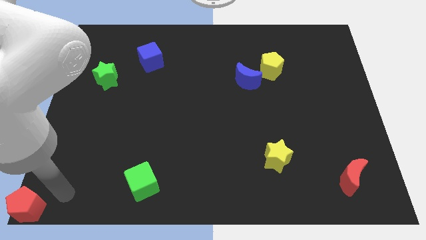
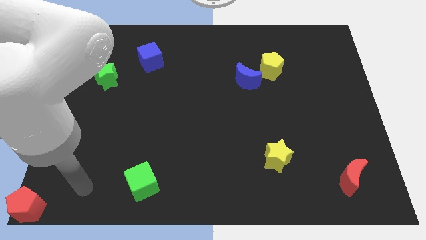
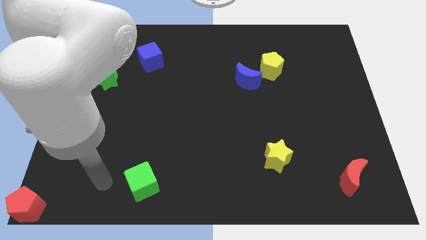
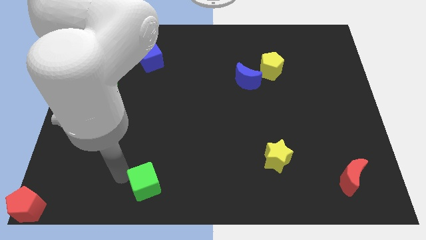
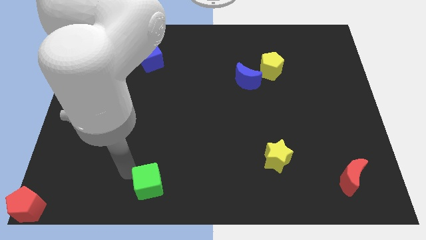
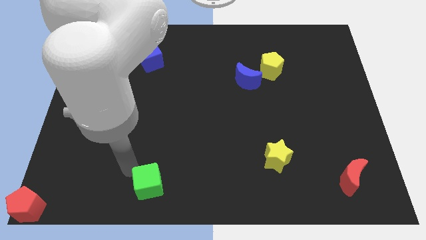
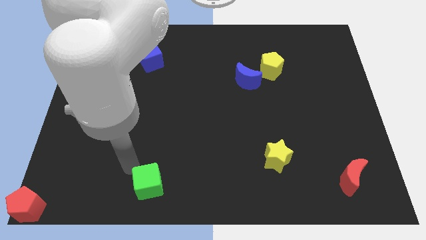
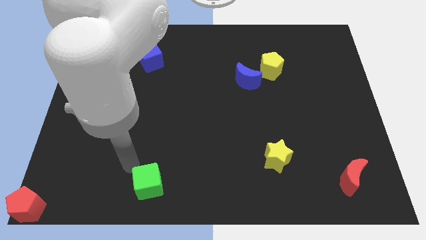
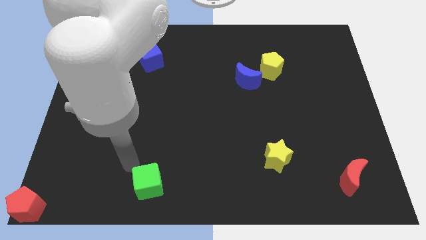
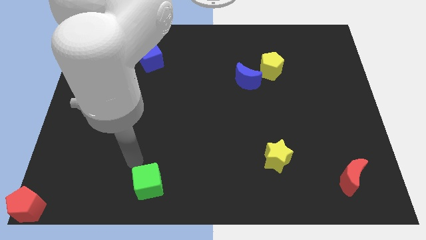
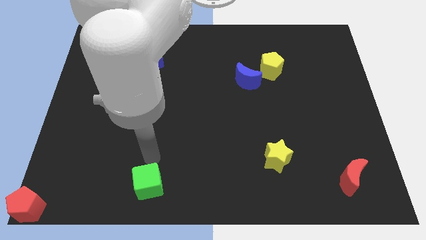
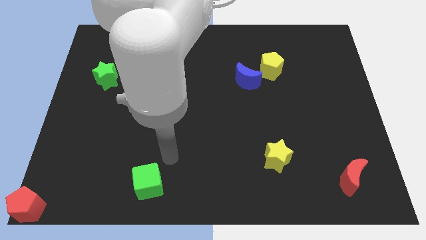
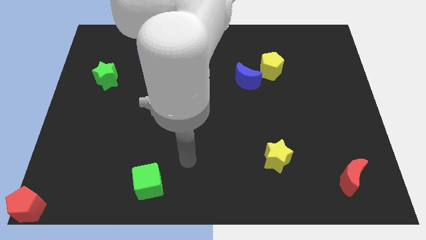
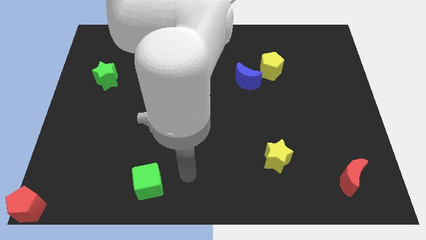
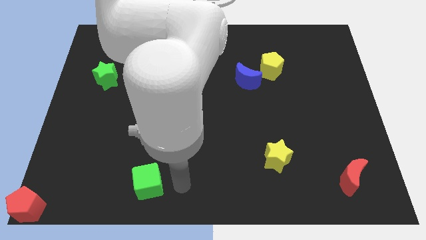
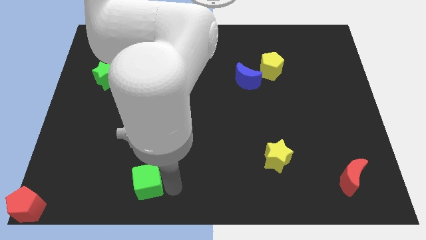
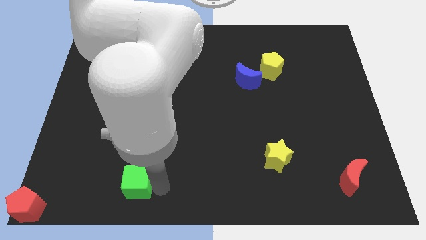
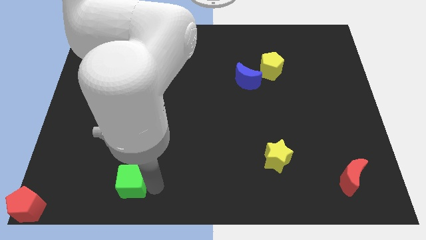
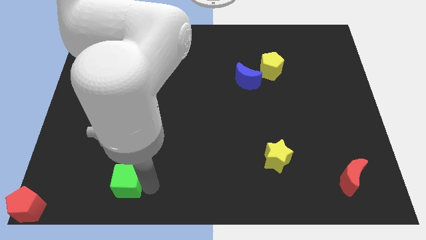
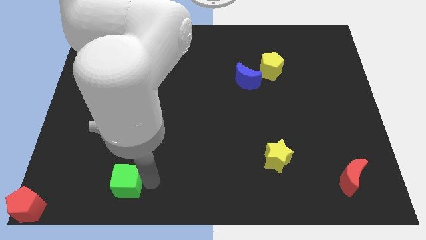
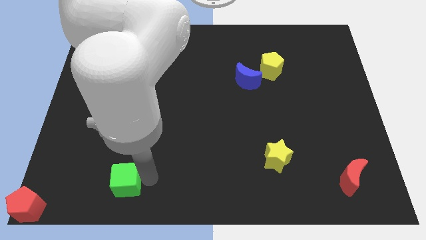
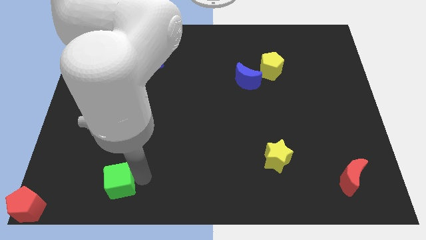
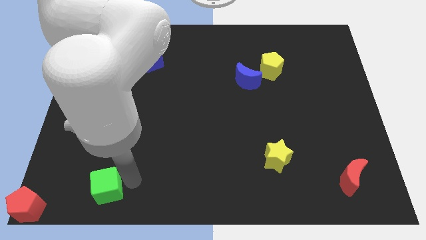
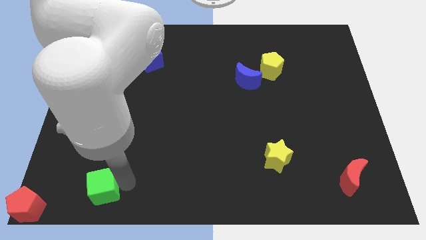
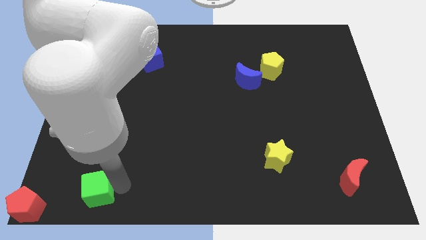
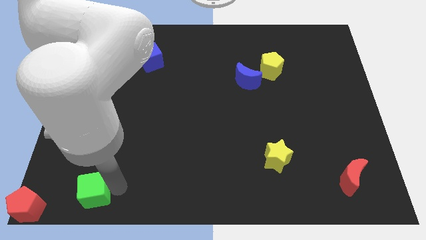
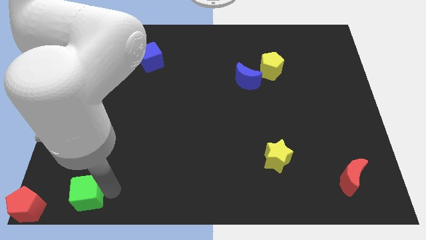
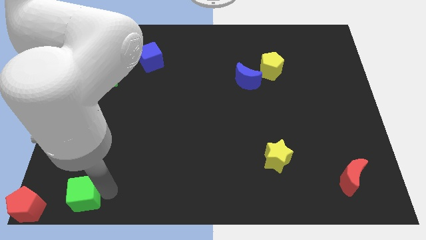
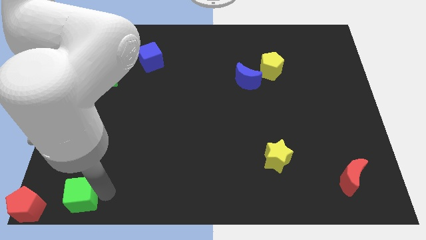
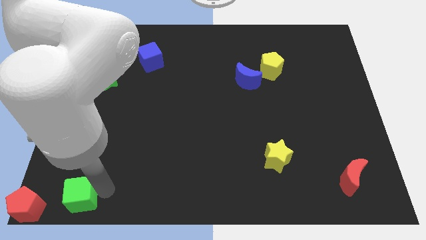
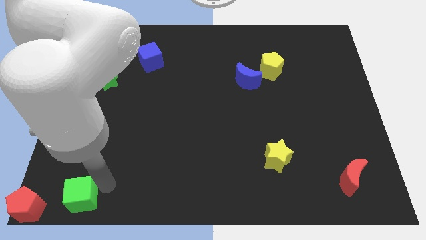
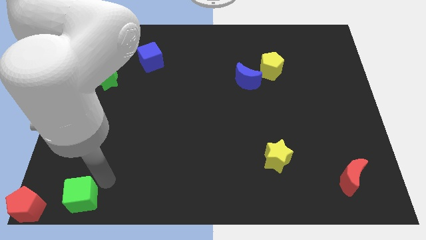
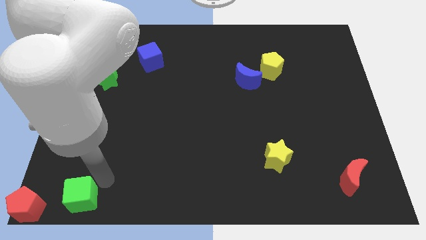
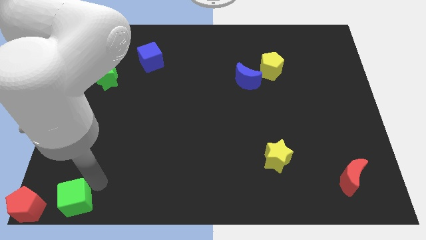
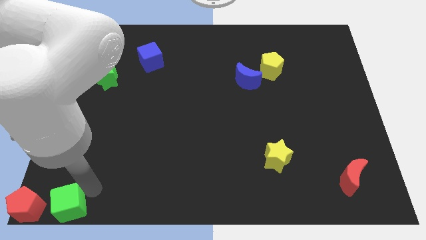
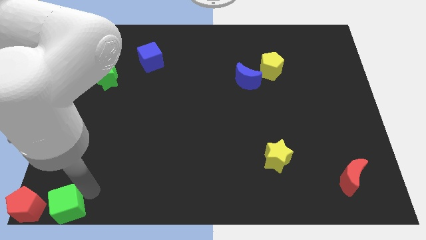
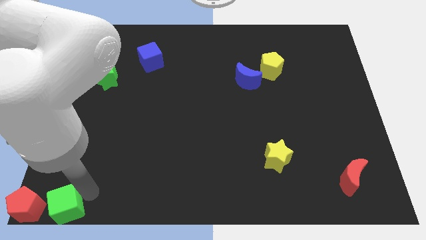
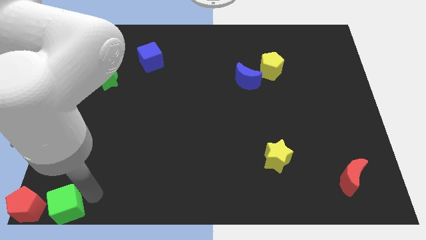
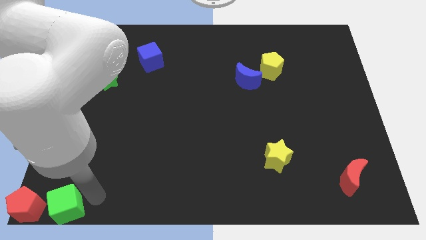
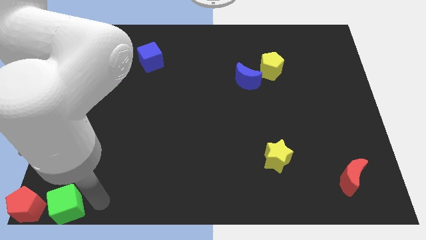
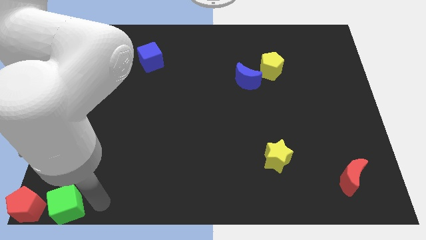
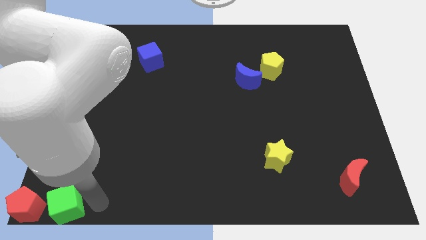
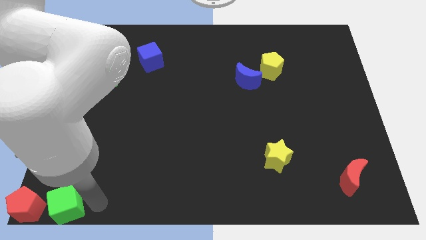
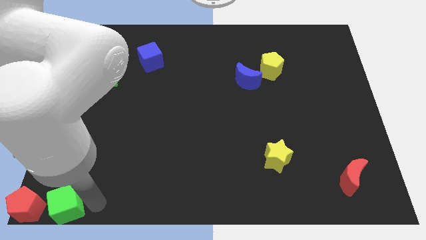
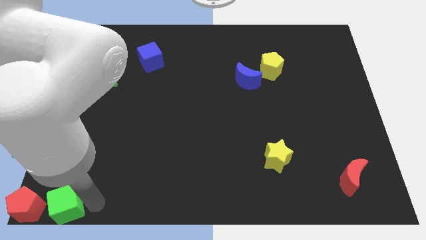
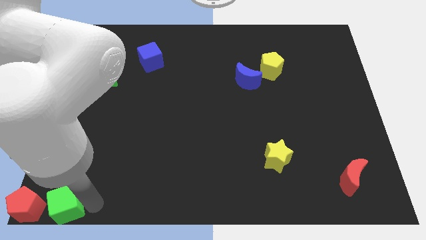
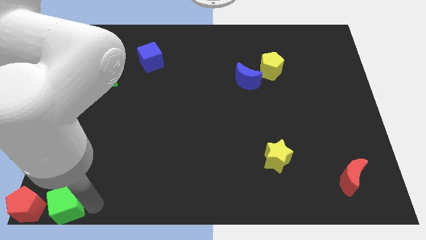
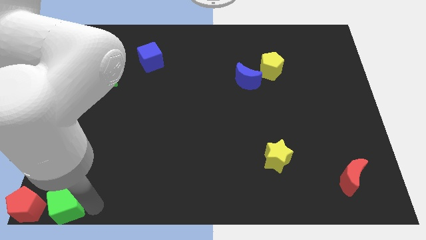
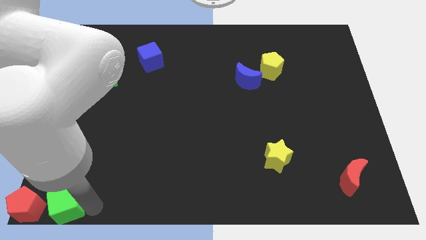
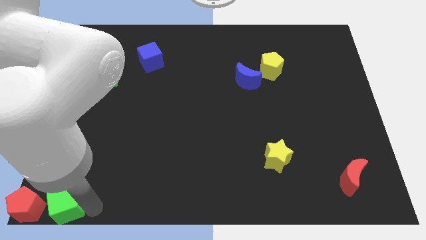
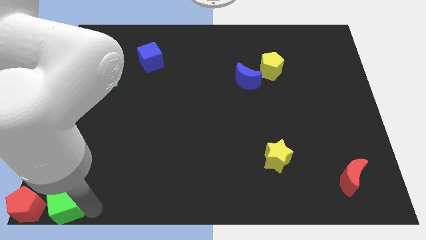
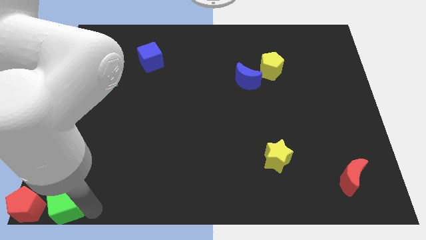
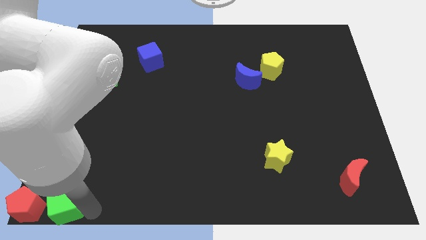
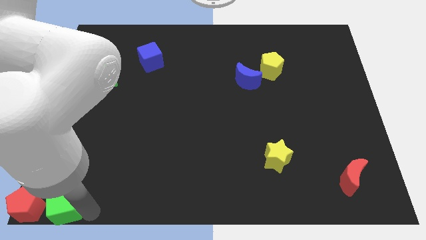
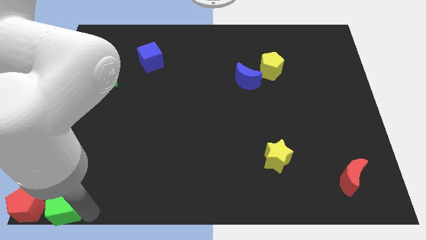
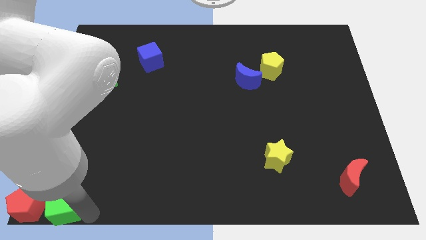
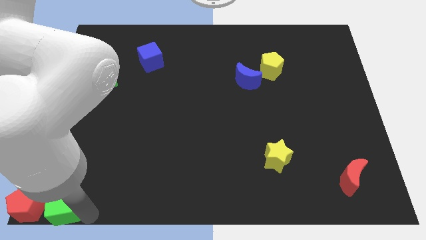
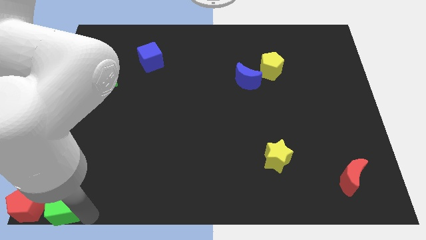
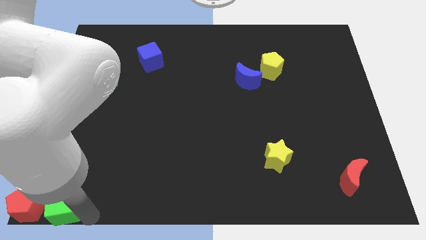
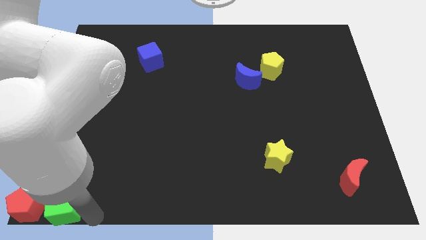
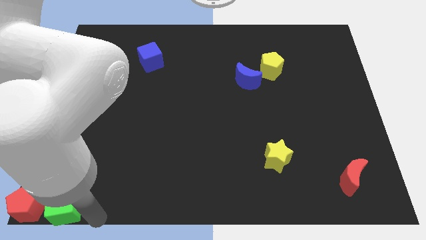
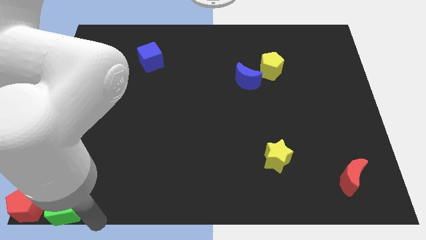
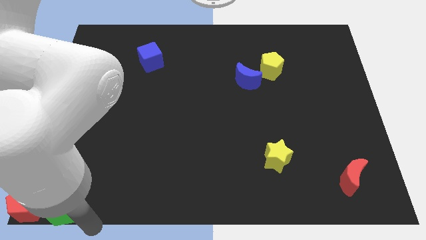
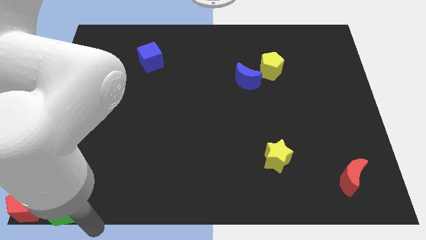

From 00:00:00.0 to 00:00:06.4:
place the green cube right to the red pentagon

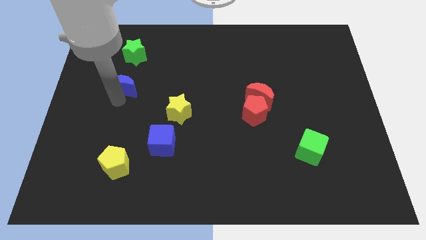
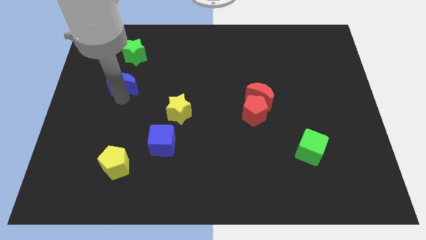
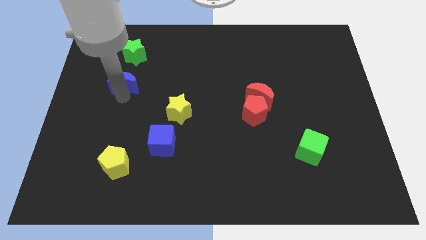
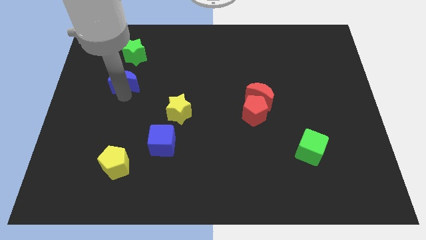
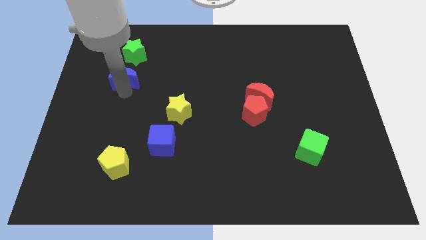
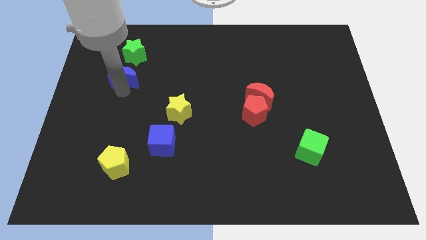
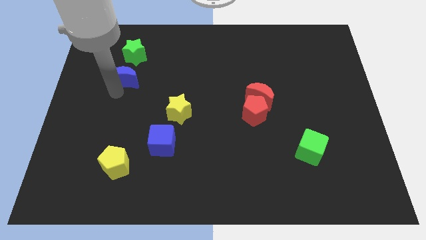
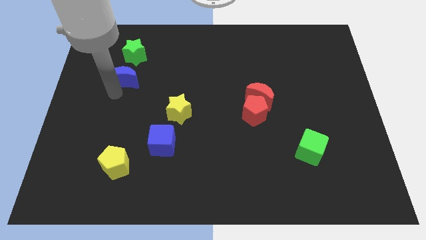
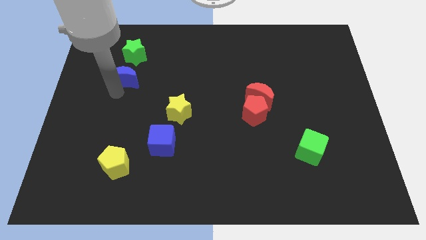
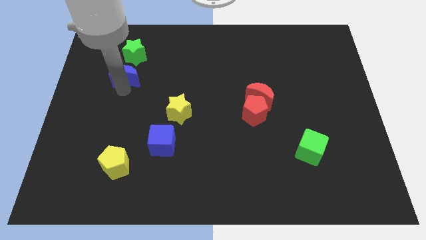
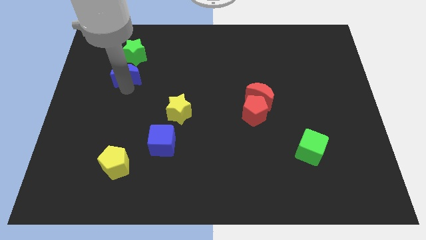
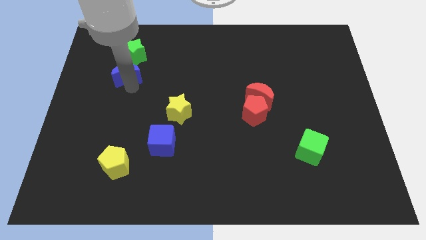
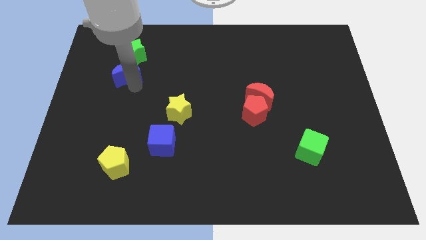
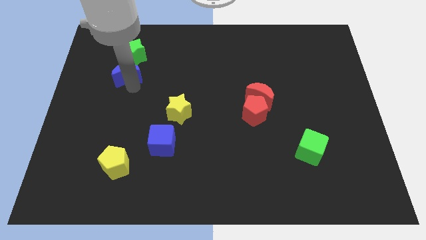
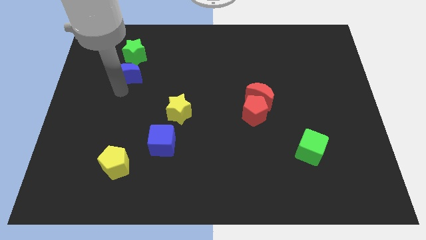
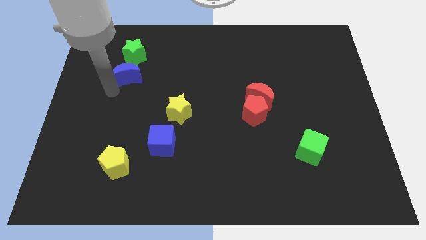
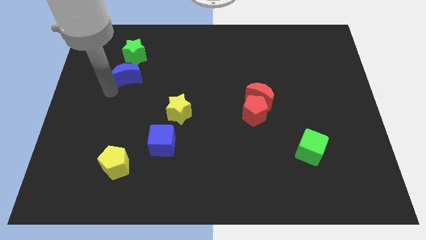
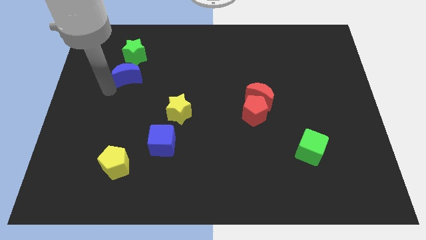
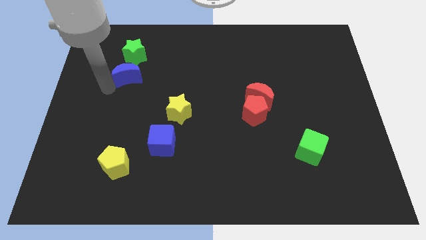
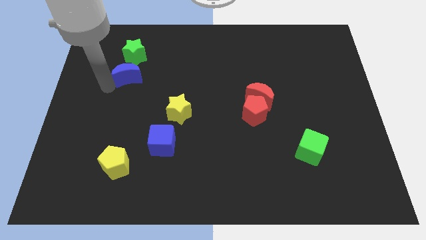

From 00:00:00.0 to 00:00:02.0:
move the blue crescent close to the green star

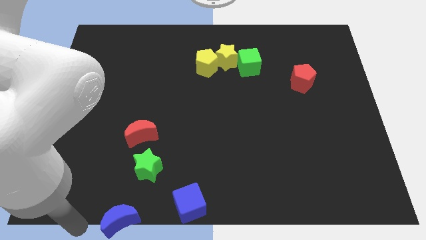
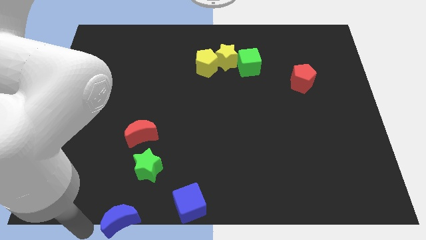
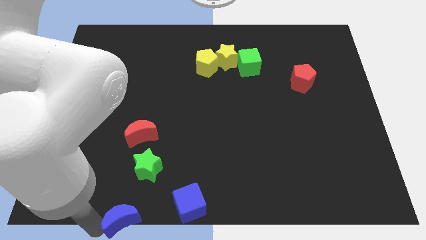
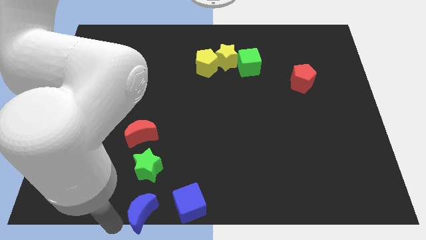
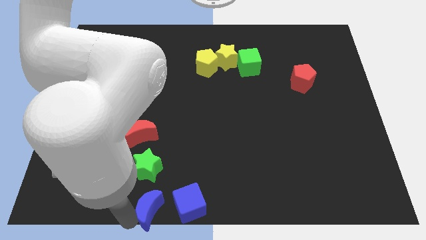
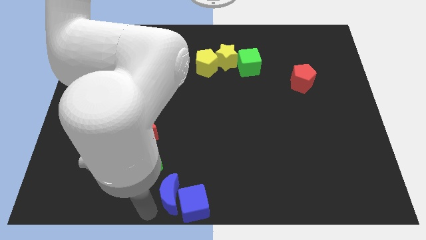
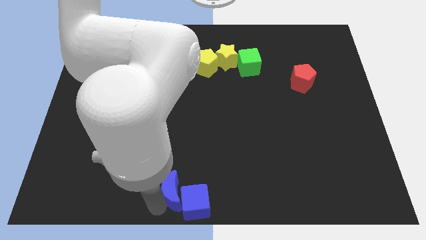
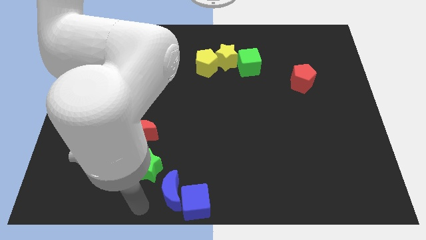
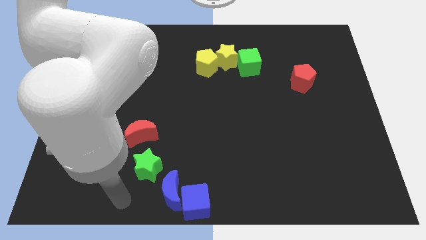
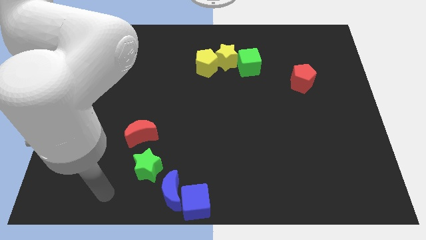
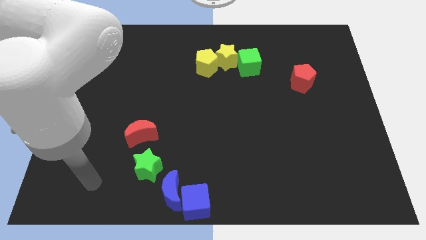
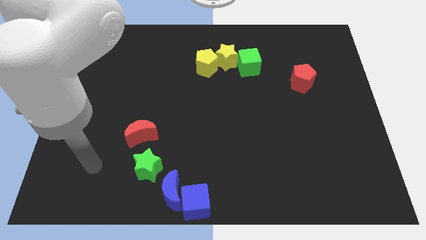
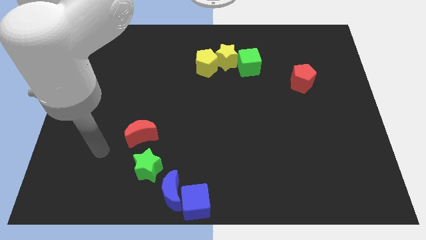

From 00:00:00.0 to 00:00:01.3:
push the blue crescent close to the blue cube
